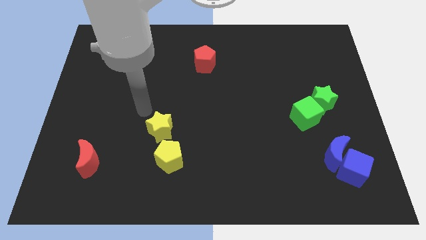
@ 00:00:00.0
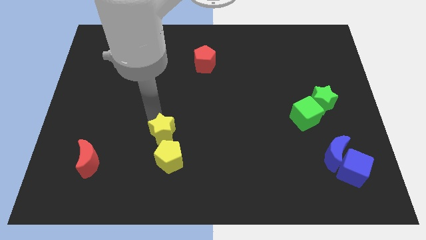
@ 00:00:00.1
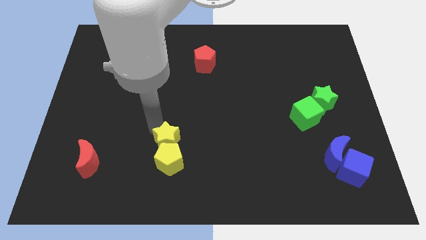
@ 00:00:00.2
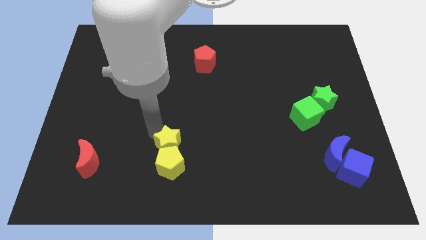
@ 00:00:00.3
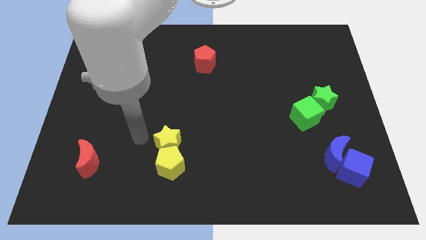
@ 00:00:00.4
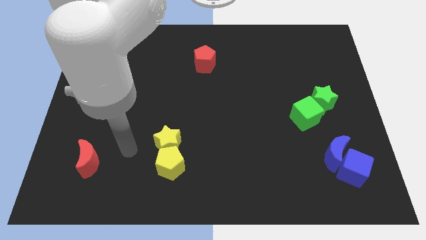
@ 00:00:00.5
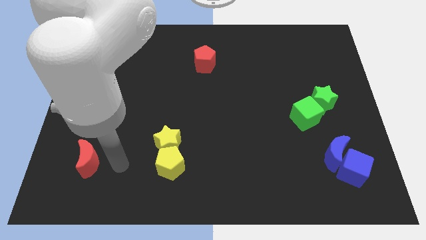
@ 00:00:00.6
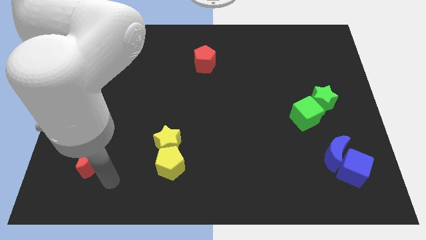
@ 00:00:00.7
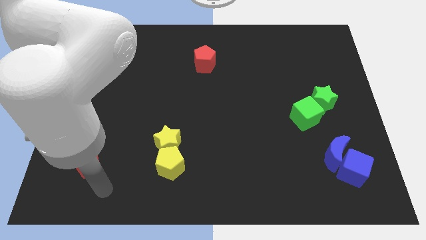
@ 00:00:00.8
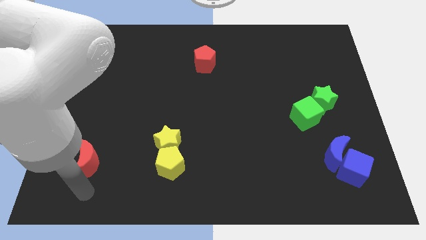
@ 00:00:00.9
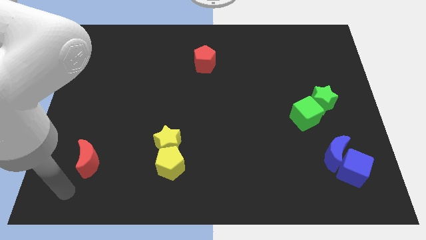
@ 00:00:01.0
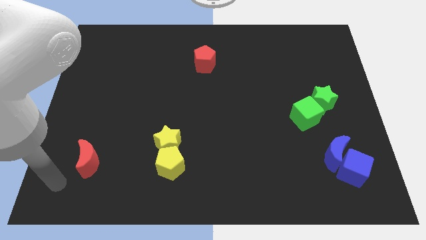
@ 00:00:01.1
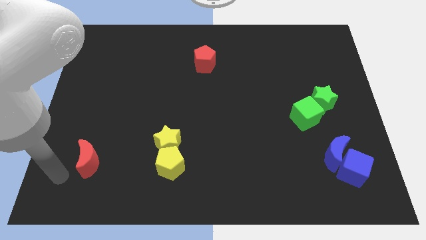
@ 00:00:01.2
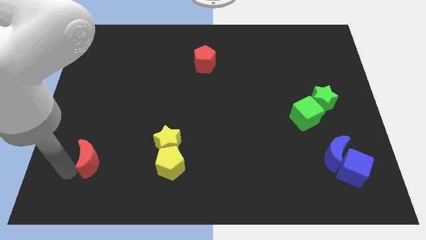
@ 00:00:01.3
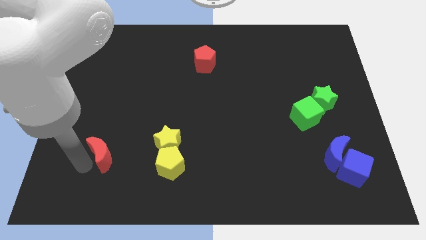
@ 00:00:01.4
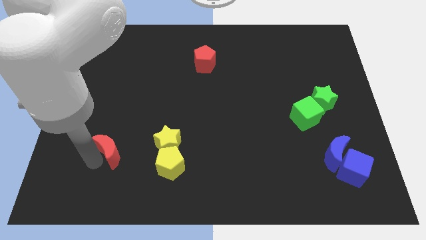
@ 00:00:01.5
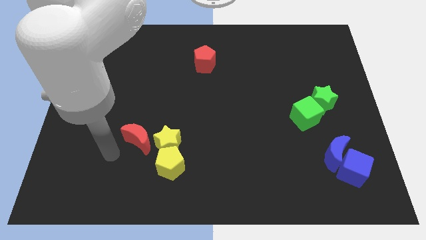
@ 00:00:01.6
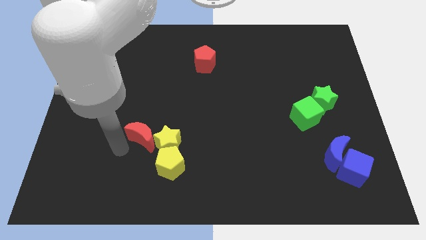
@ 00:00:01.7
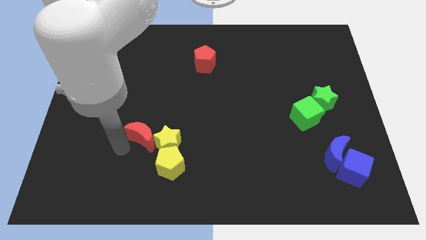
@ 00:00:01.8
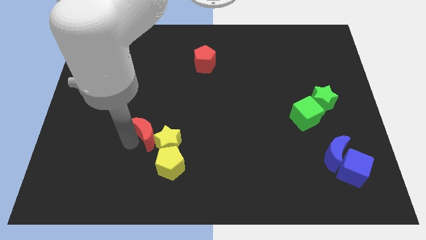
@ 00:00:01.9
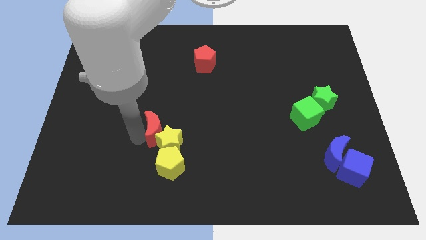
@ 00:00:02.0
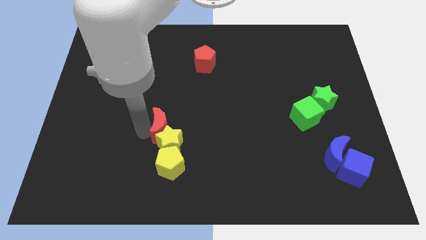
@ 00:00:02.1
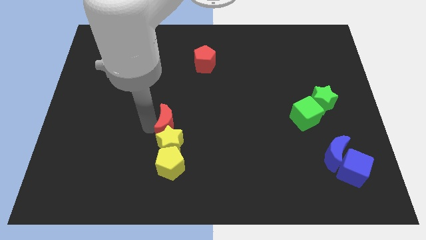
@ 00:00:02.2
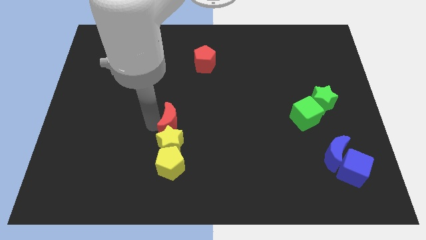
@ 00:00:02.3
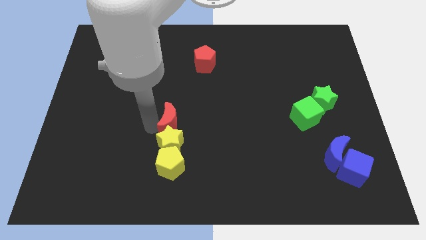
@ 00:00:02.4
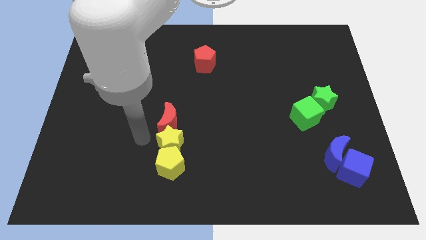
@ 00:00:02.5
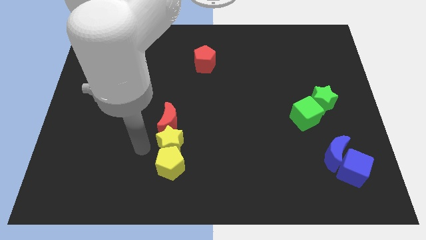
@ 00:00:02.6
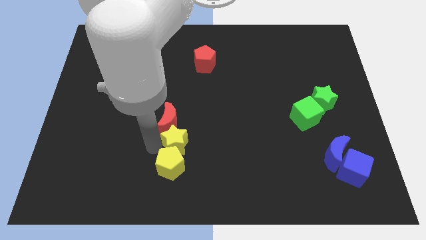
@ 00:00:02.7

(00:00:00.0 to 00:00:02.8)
move the red moon above the yellow star

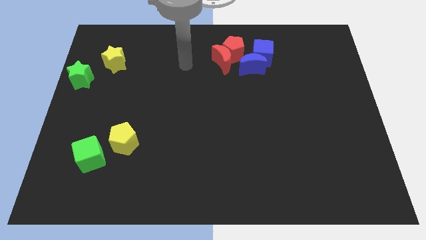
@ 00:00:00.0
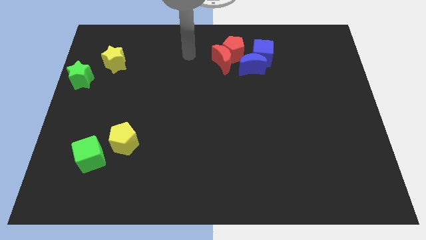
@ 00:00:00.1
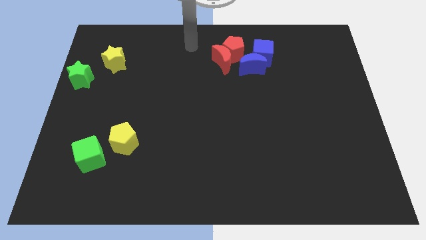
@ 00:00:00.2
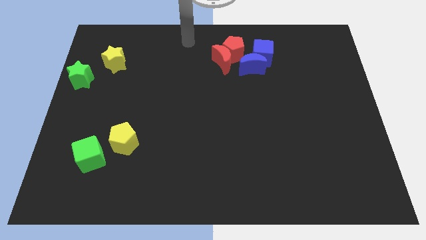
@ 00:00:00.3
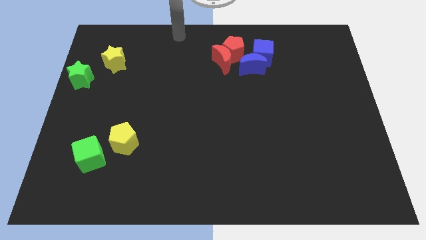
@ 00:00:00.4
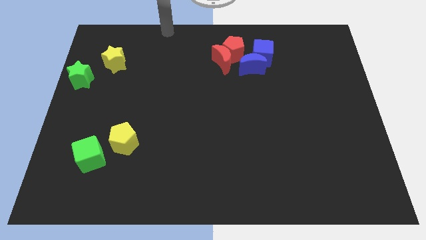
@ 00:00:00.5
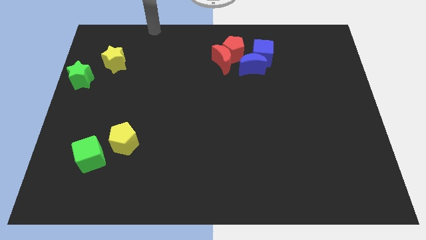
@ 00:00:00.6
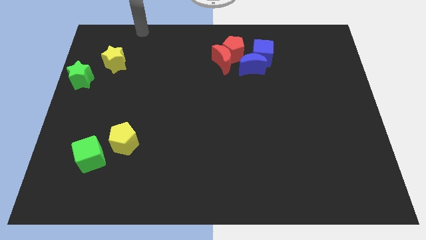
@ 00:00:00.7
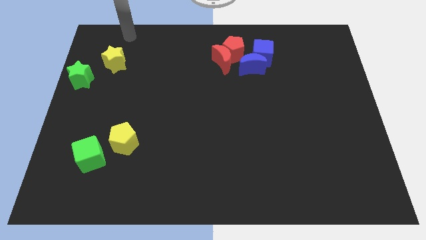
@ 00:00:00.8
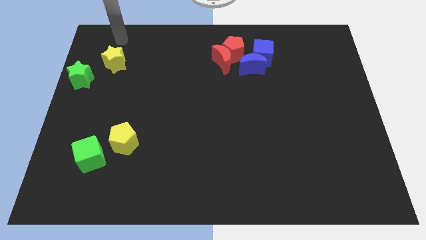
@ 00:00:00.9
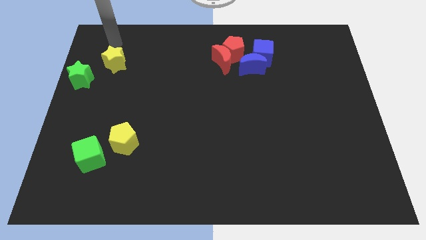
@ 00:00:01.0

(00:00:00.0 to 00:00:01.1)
move your arm on the top of yellow star

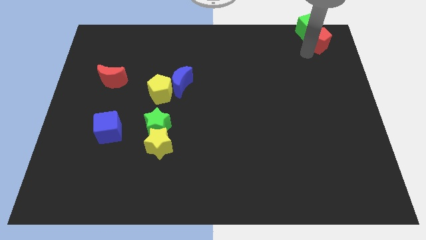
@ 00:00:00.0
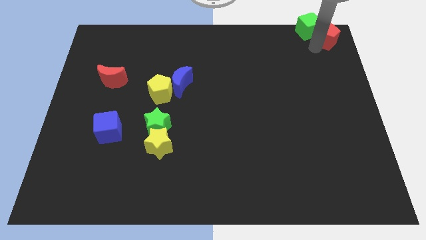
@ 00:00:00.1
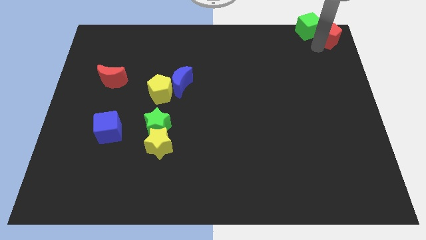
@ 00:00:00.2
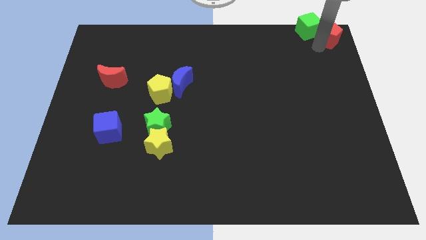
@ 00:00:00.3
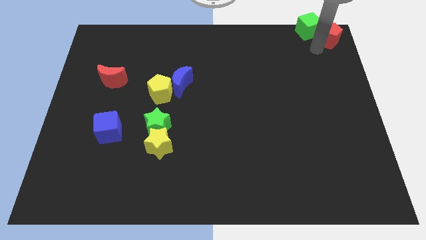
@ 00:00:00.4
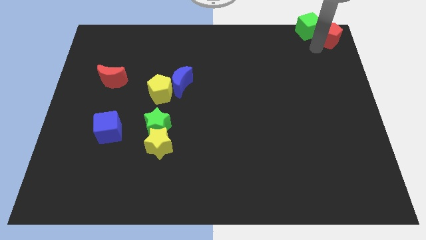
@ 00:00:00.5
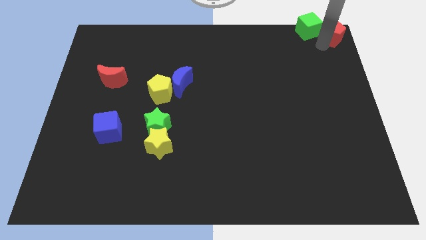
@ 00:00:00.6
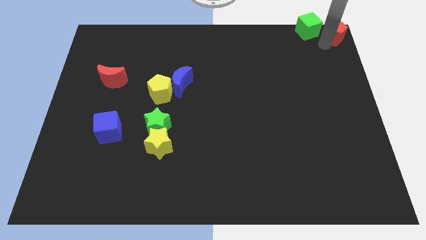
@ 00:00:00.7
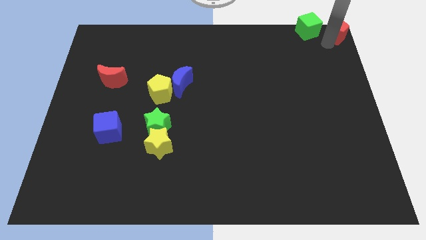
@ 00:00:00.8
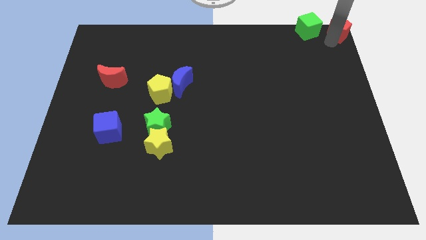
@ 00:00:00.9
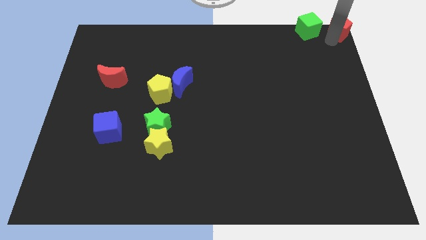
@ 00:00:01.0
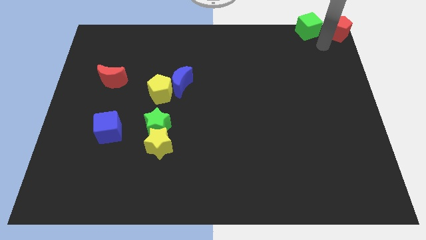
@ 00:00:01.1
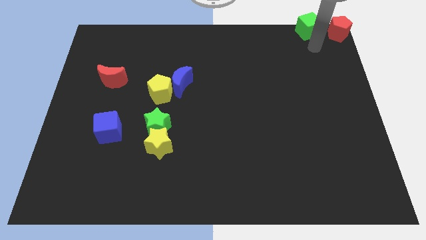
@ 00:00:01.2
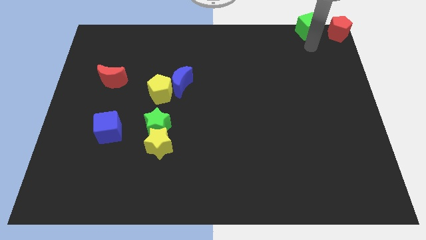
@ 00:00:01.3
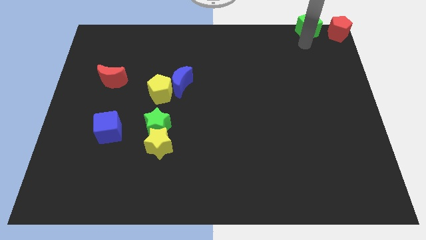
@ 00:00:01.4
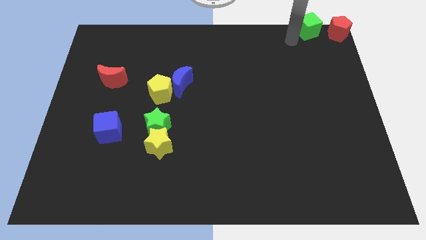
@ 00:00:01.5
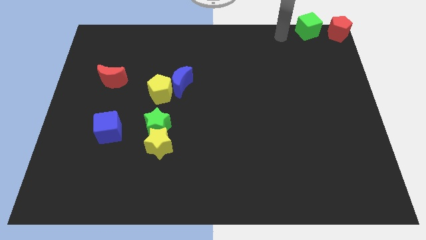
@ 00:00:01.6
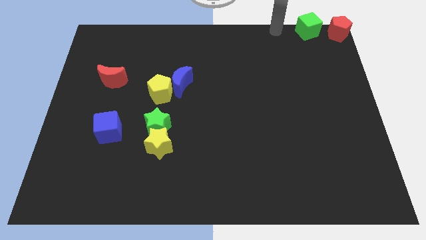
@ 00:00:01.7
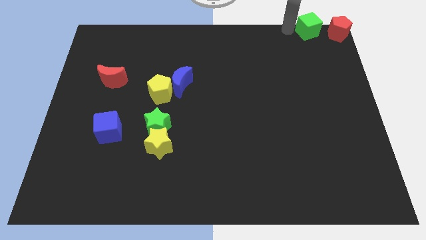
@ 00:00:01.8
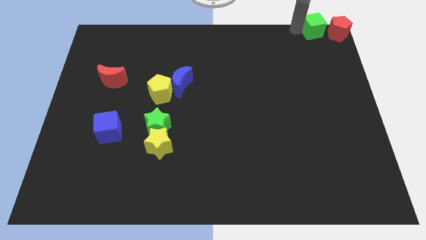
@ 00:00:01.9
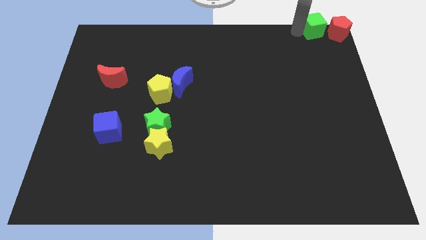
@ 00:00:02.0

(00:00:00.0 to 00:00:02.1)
put the green cube and the red pentagon at the top right corner

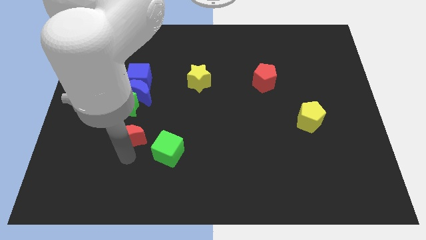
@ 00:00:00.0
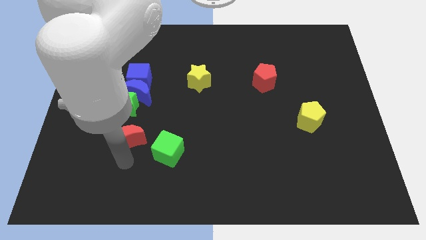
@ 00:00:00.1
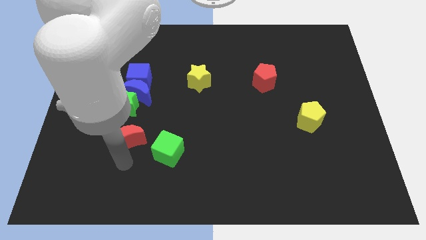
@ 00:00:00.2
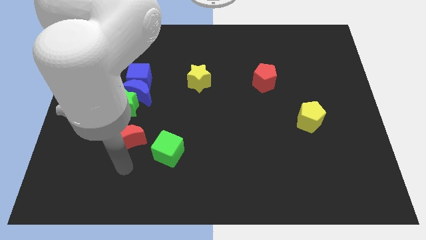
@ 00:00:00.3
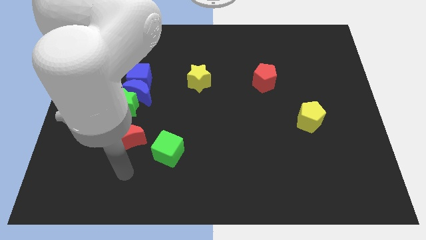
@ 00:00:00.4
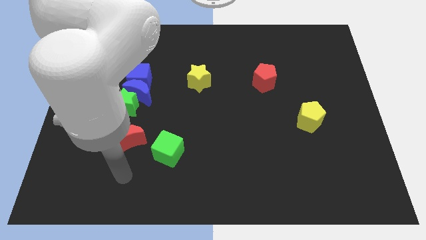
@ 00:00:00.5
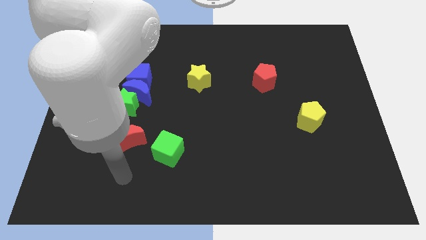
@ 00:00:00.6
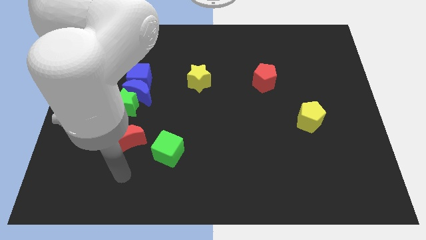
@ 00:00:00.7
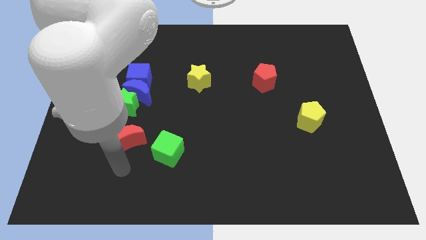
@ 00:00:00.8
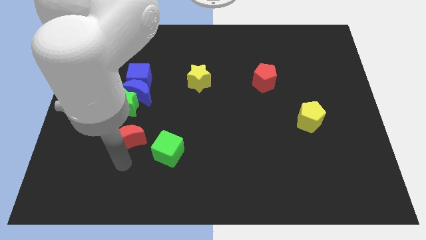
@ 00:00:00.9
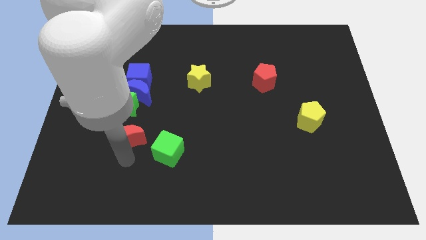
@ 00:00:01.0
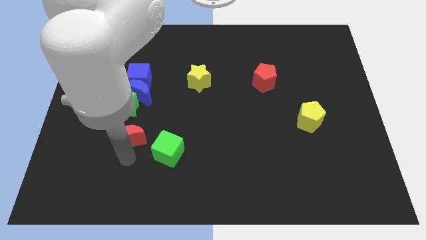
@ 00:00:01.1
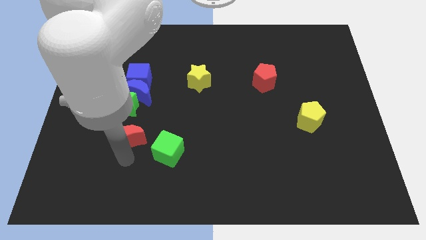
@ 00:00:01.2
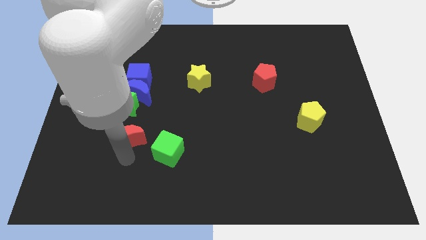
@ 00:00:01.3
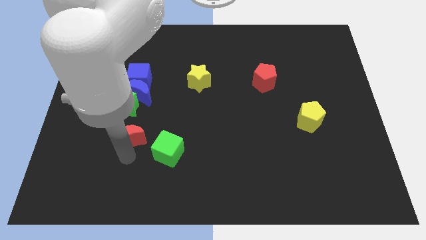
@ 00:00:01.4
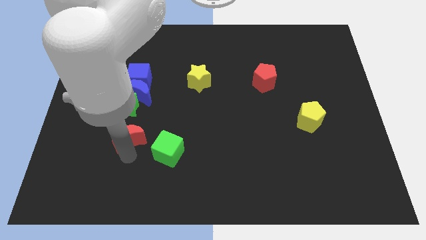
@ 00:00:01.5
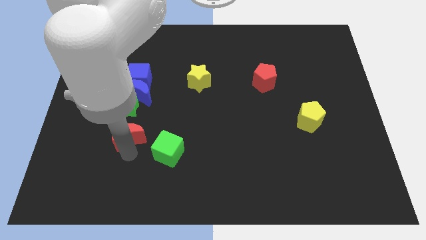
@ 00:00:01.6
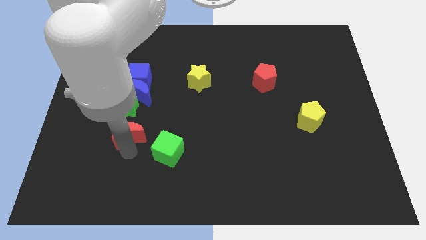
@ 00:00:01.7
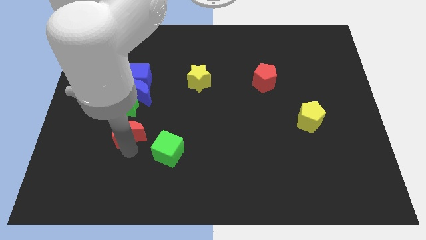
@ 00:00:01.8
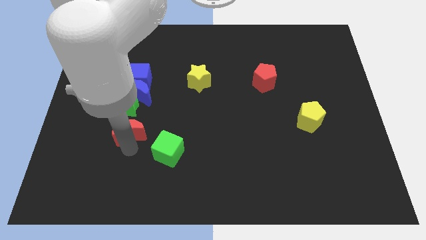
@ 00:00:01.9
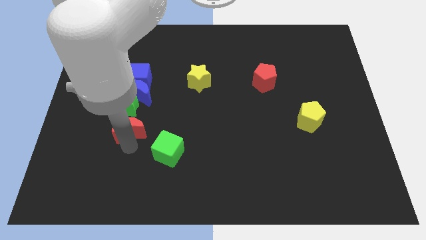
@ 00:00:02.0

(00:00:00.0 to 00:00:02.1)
push the arm up slightly

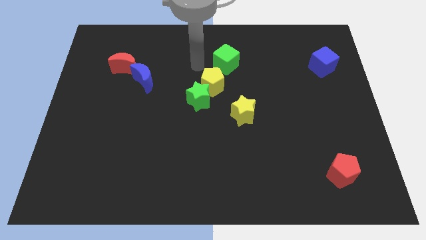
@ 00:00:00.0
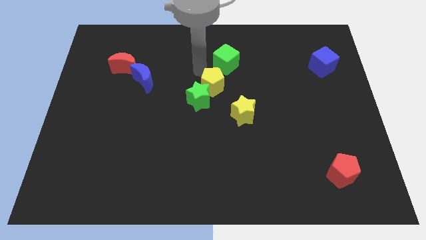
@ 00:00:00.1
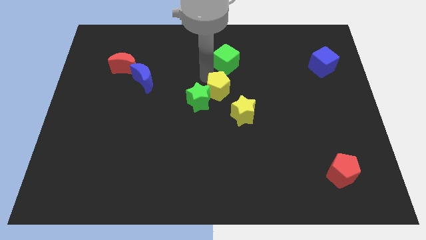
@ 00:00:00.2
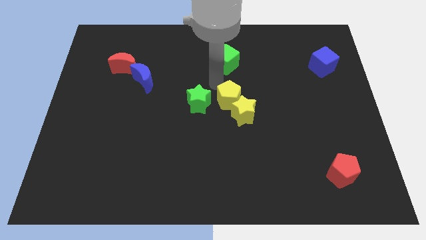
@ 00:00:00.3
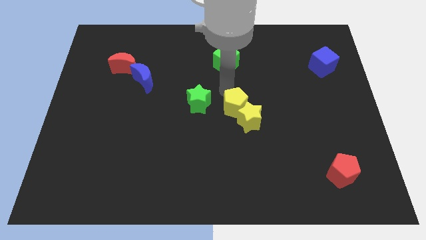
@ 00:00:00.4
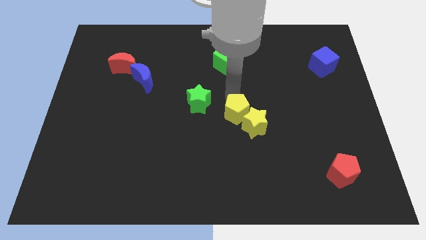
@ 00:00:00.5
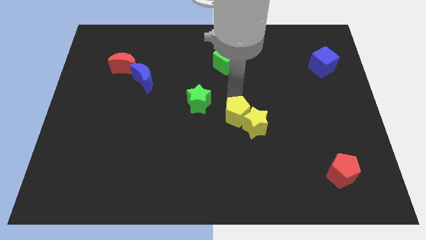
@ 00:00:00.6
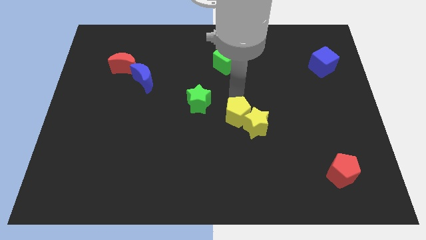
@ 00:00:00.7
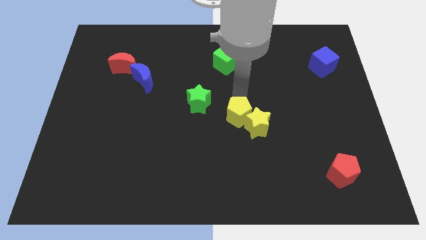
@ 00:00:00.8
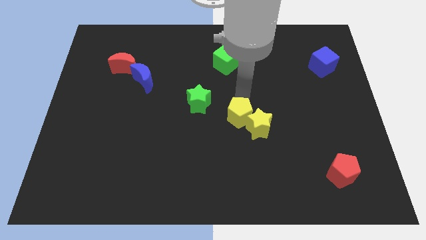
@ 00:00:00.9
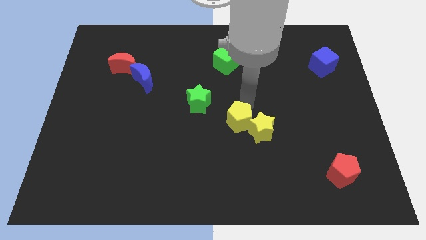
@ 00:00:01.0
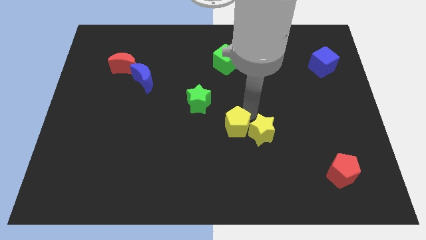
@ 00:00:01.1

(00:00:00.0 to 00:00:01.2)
push the yellow pentagon into the yellow star
